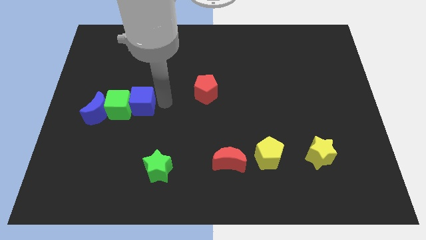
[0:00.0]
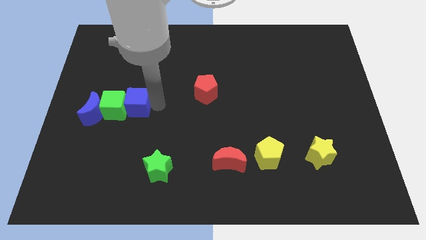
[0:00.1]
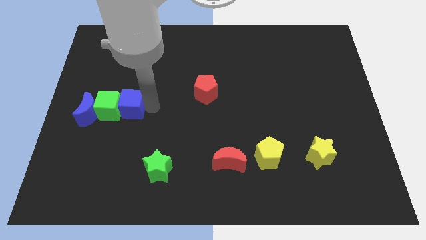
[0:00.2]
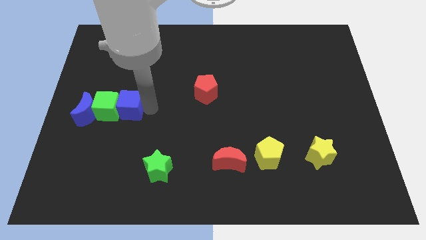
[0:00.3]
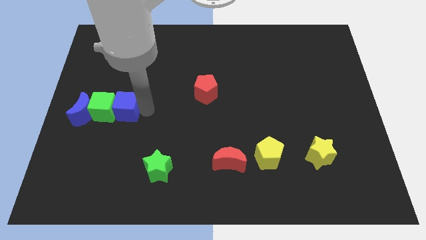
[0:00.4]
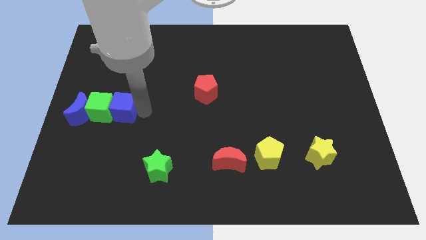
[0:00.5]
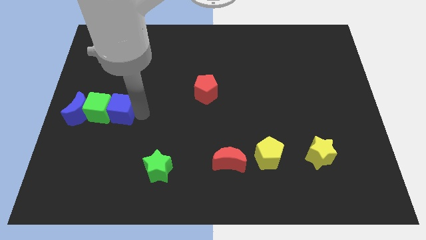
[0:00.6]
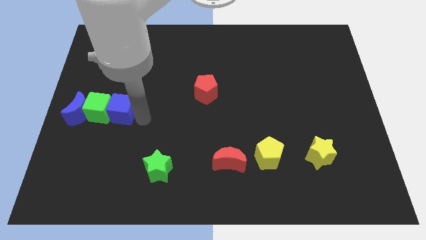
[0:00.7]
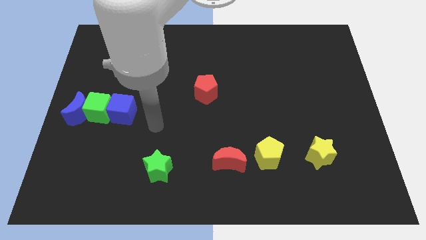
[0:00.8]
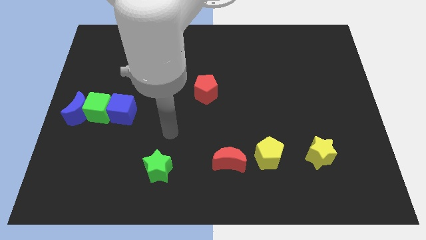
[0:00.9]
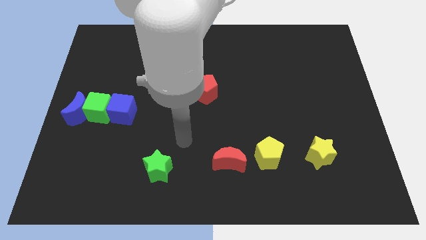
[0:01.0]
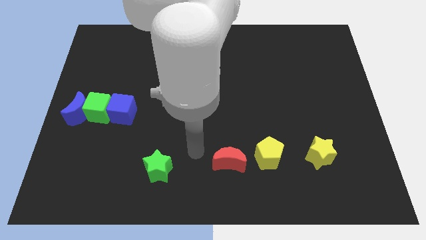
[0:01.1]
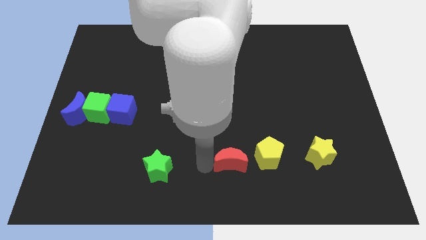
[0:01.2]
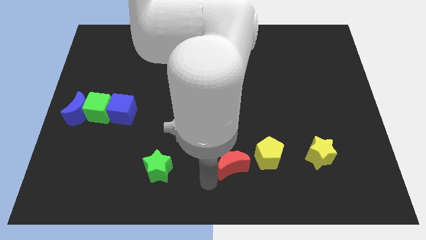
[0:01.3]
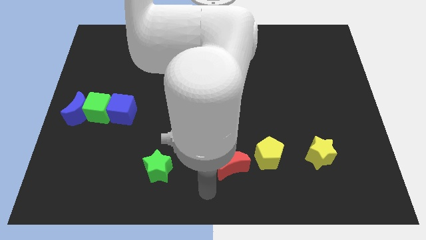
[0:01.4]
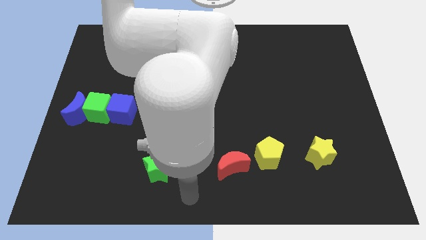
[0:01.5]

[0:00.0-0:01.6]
move blue moon with the two cubes

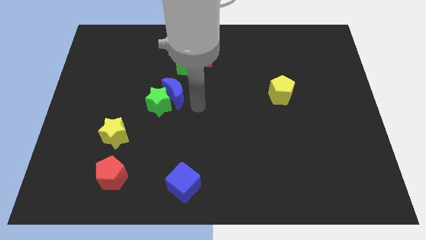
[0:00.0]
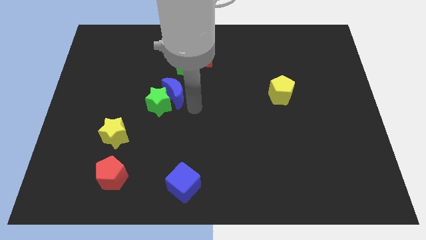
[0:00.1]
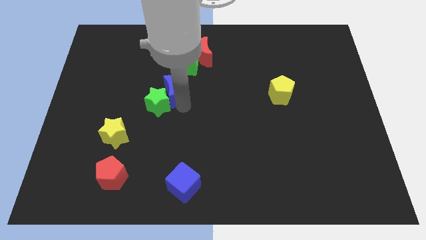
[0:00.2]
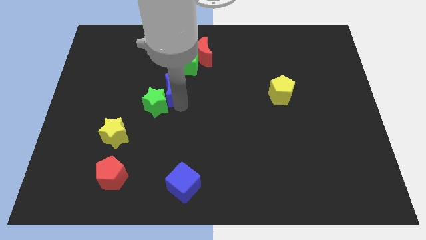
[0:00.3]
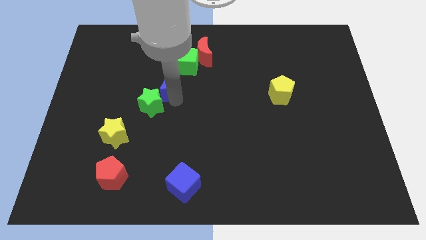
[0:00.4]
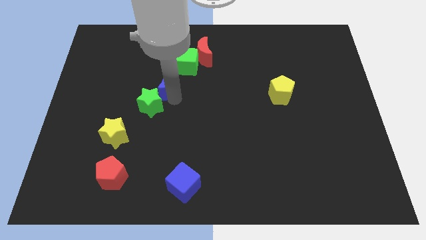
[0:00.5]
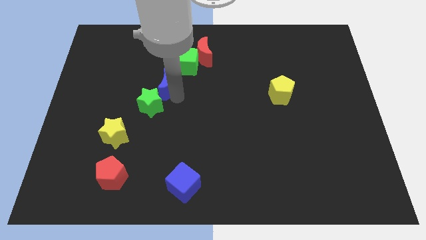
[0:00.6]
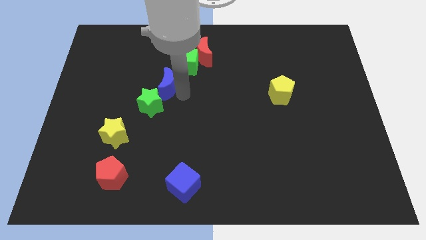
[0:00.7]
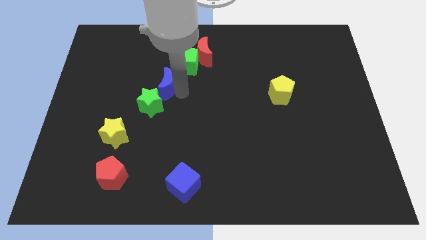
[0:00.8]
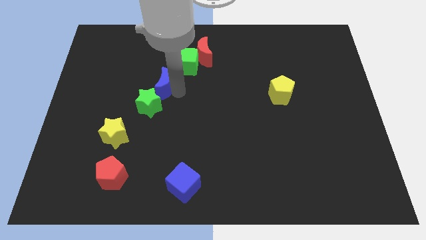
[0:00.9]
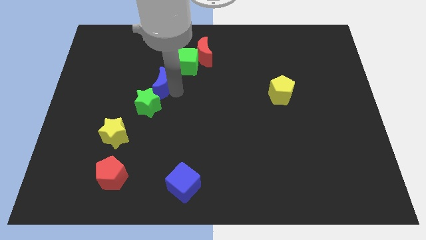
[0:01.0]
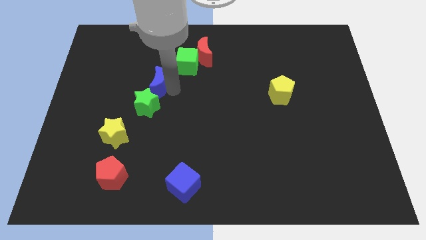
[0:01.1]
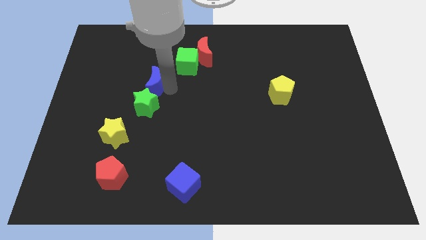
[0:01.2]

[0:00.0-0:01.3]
move the blue moon above the green star

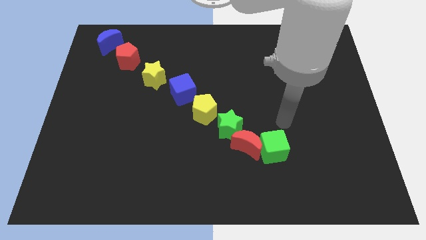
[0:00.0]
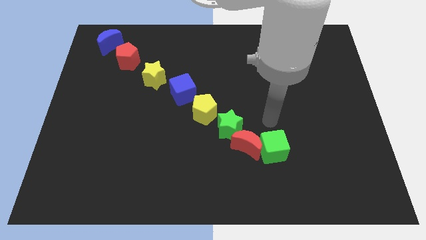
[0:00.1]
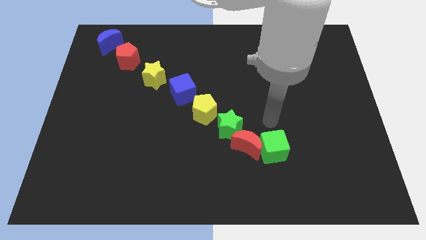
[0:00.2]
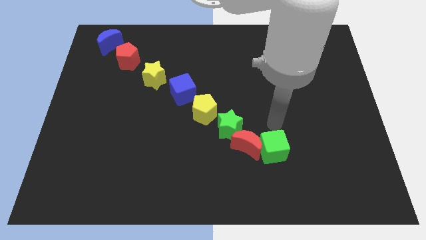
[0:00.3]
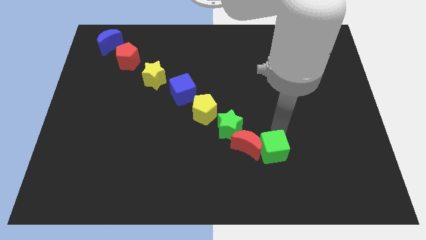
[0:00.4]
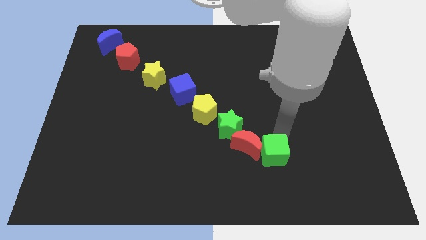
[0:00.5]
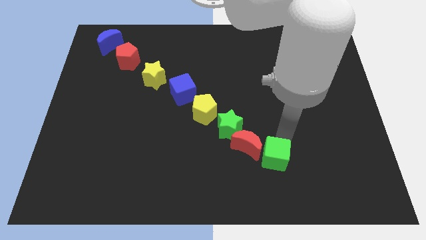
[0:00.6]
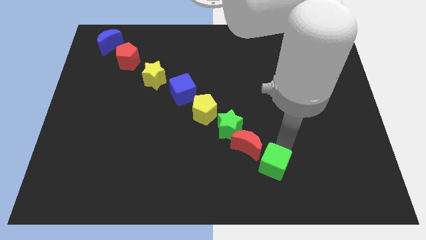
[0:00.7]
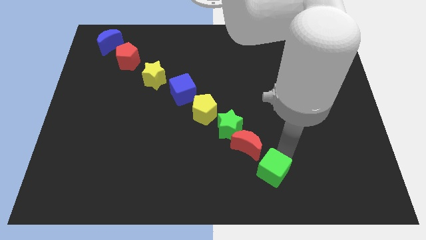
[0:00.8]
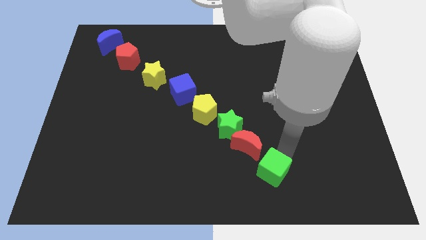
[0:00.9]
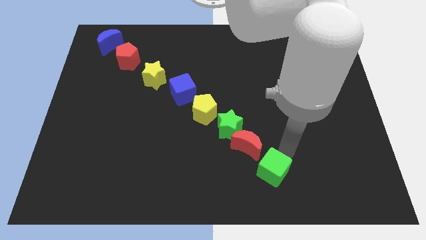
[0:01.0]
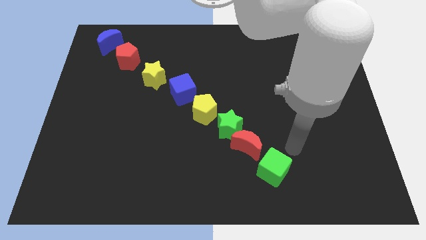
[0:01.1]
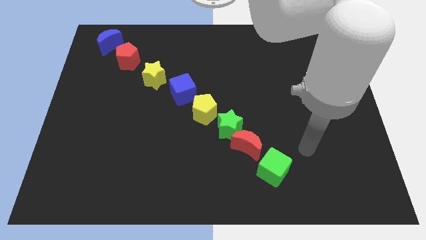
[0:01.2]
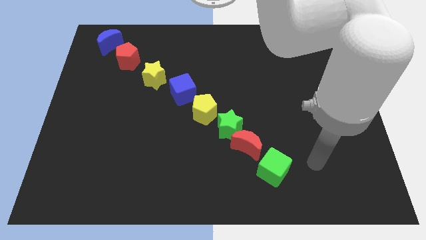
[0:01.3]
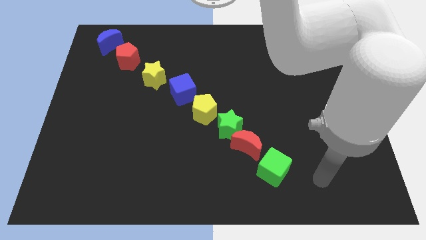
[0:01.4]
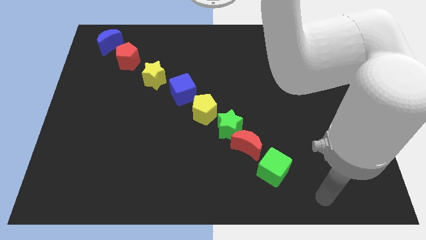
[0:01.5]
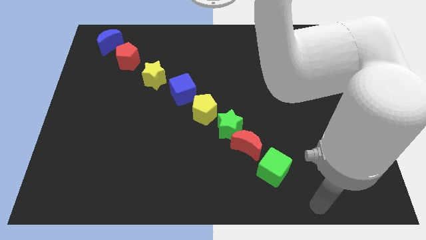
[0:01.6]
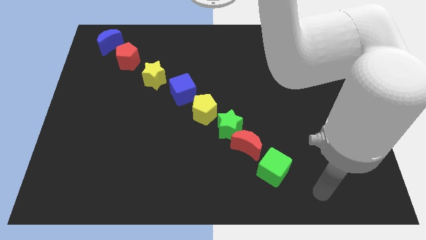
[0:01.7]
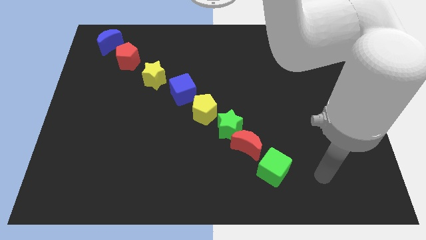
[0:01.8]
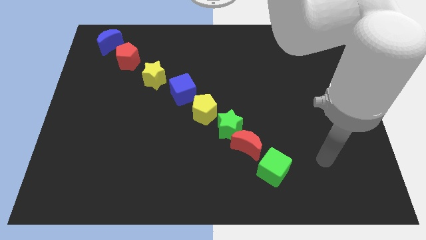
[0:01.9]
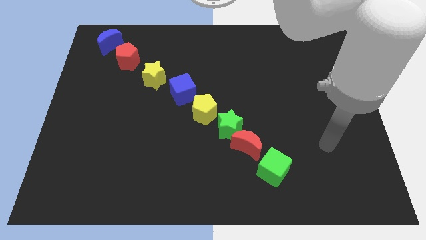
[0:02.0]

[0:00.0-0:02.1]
line up all the blocks diagonally

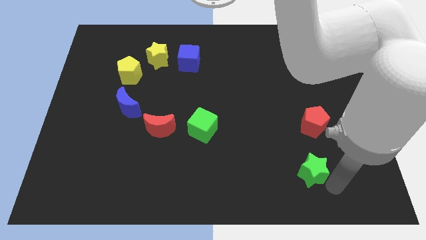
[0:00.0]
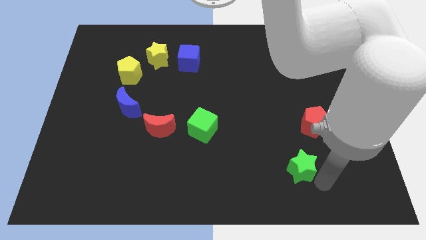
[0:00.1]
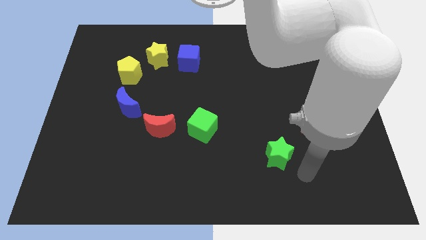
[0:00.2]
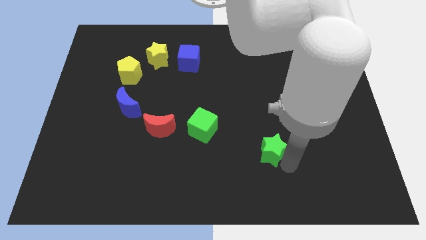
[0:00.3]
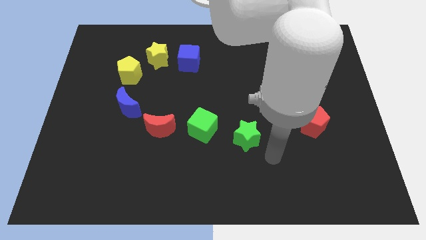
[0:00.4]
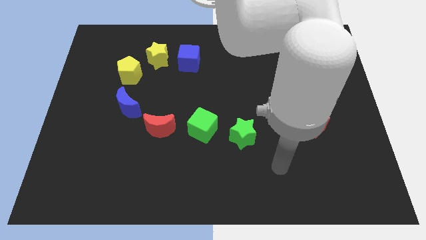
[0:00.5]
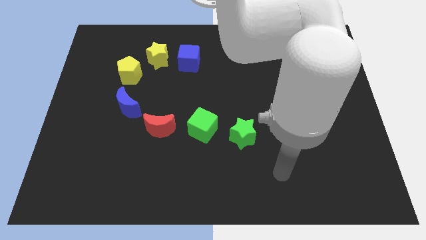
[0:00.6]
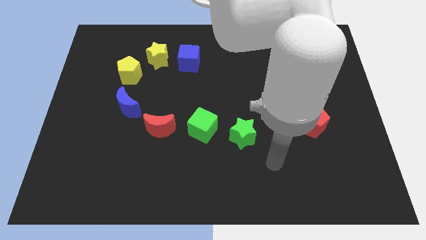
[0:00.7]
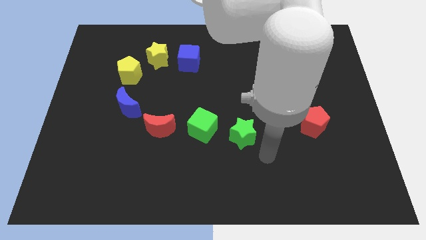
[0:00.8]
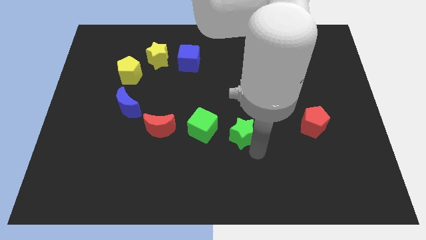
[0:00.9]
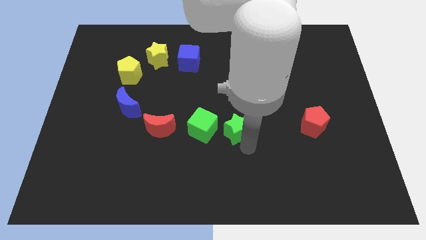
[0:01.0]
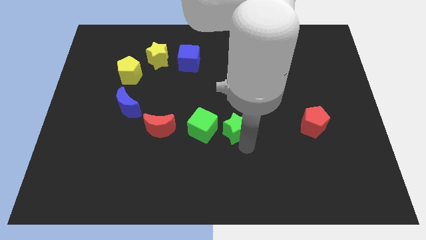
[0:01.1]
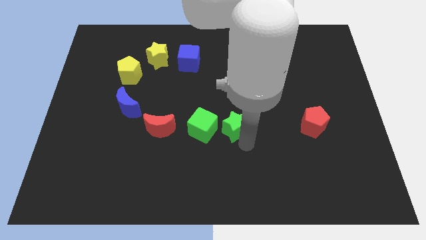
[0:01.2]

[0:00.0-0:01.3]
push the green star right to the green cube

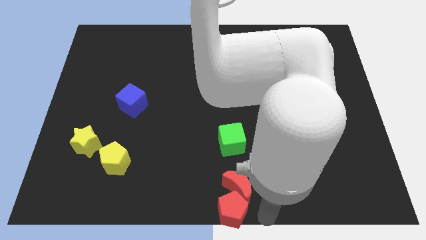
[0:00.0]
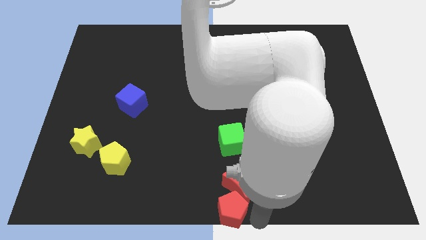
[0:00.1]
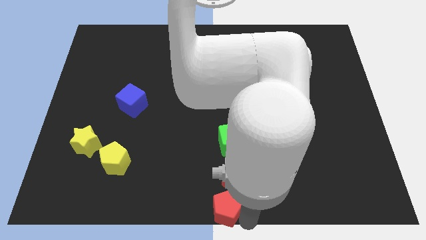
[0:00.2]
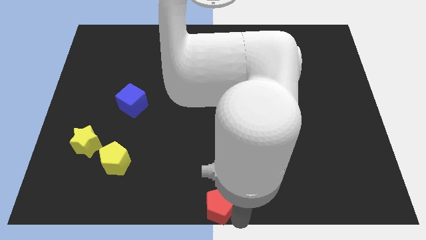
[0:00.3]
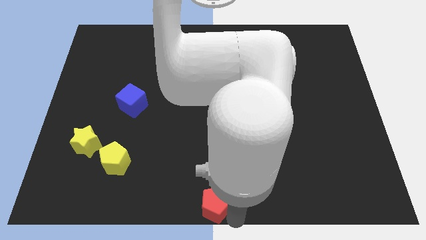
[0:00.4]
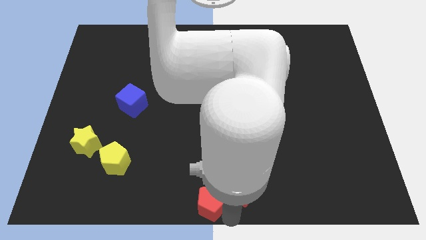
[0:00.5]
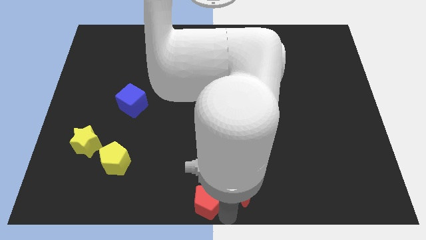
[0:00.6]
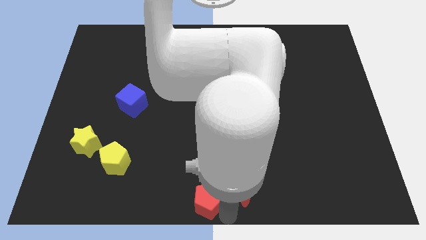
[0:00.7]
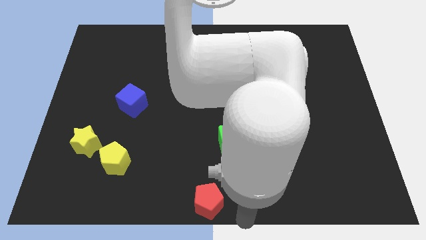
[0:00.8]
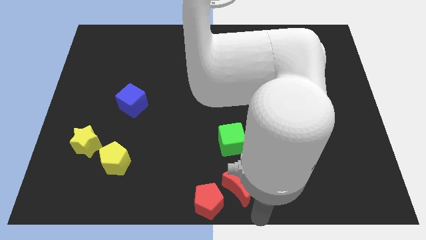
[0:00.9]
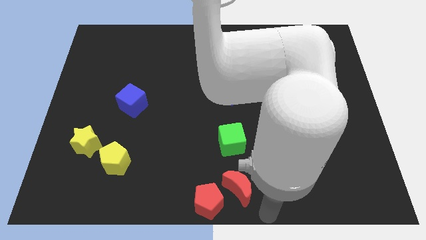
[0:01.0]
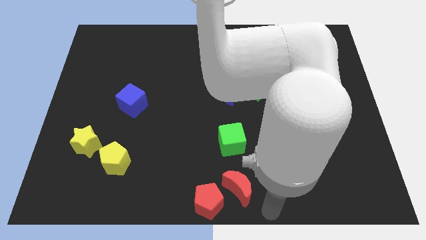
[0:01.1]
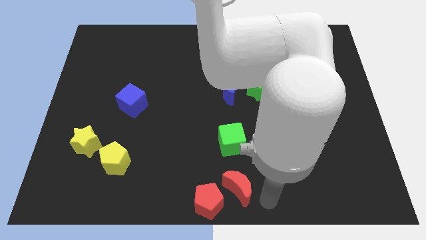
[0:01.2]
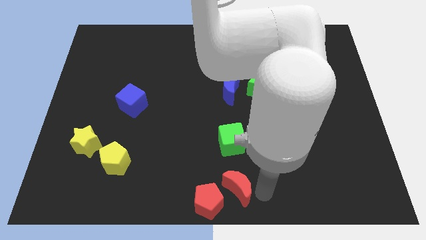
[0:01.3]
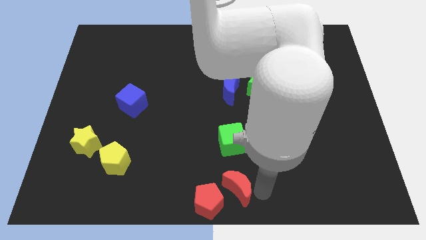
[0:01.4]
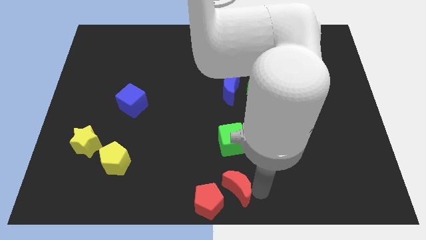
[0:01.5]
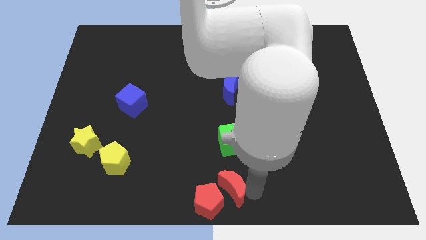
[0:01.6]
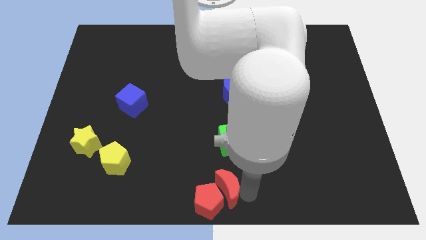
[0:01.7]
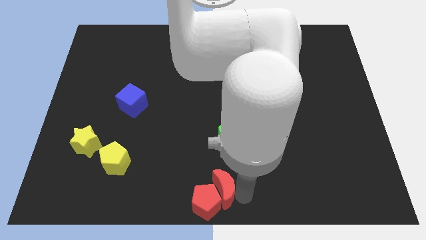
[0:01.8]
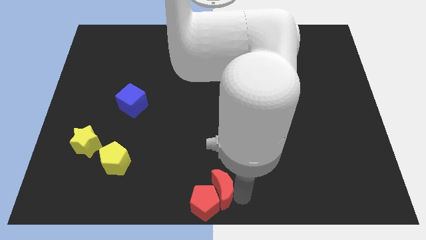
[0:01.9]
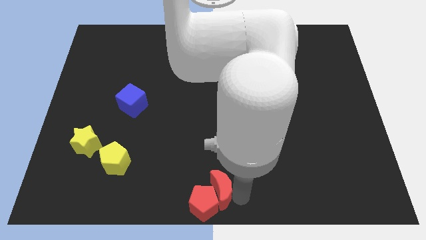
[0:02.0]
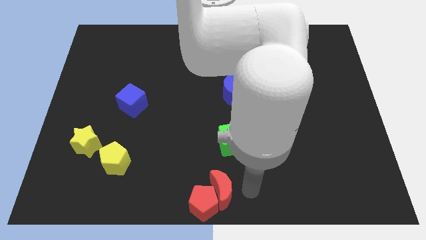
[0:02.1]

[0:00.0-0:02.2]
move red moon along with red pentagon to the bottom center

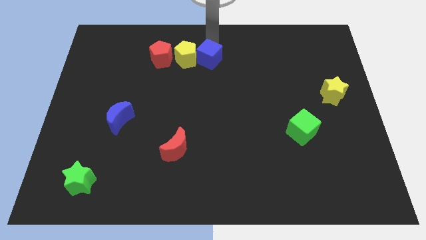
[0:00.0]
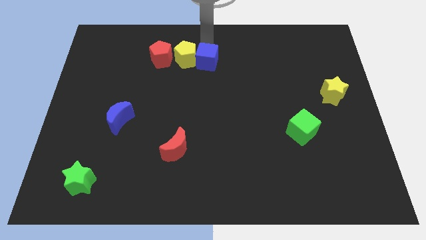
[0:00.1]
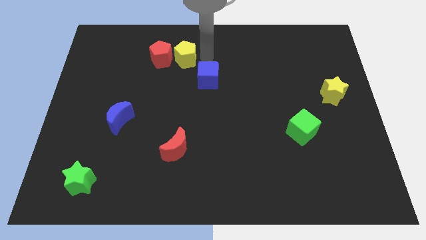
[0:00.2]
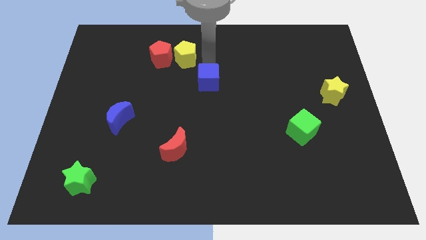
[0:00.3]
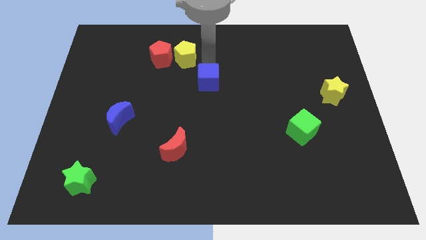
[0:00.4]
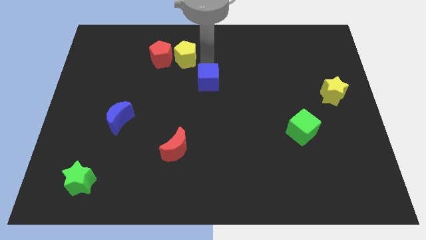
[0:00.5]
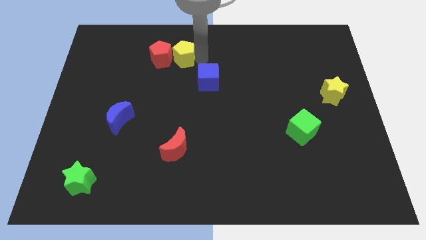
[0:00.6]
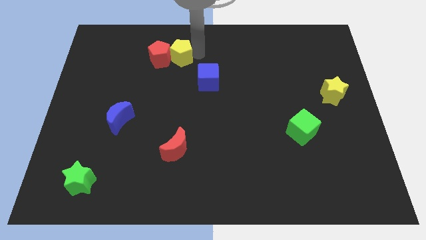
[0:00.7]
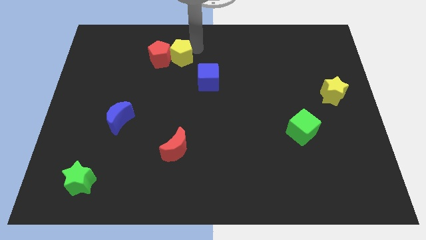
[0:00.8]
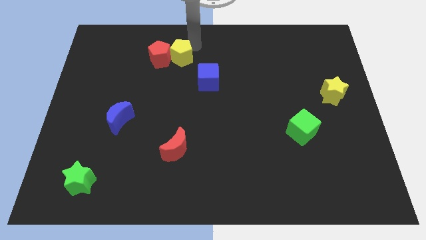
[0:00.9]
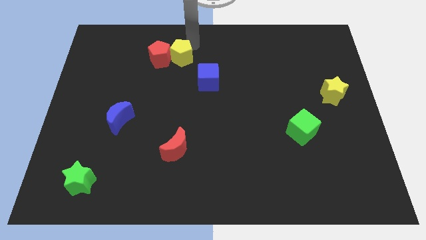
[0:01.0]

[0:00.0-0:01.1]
separate blue cube and yellow pentagon
